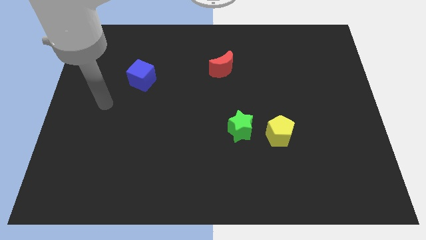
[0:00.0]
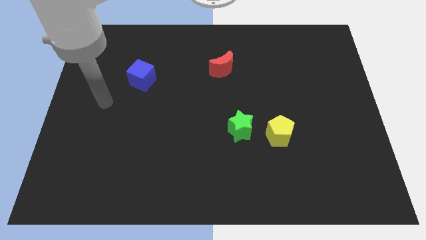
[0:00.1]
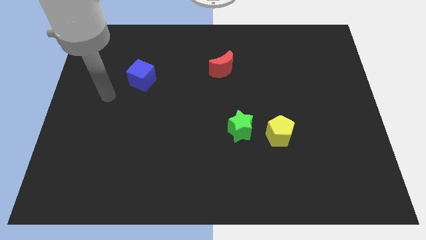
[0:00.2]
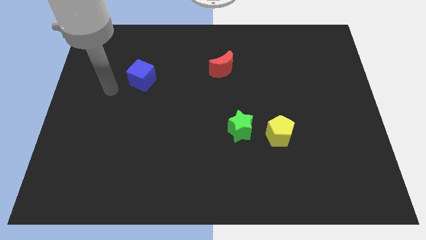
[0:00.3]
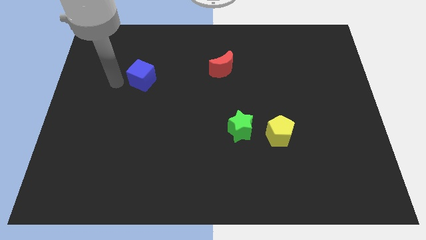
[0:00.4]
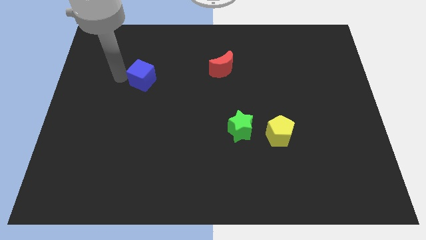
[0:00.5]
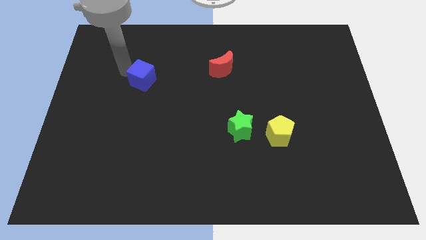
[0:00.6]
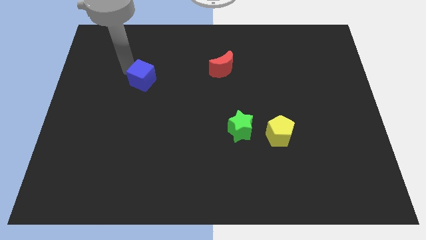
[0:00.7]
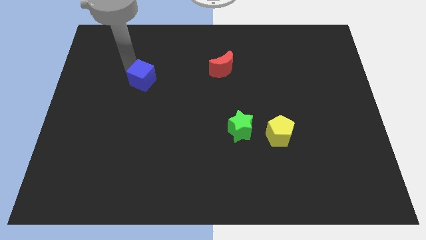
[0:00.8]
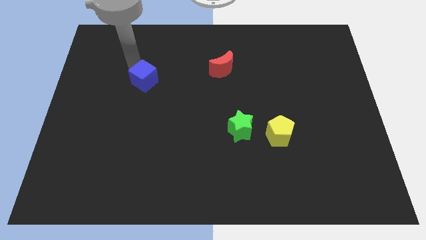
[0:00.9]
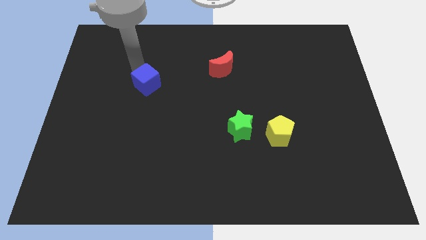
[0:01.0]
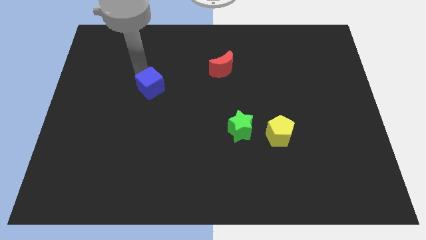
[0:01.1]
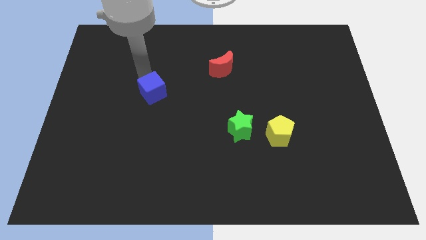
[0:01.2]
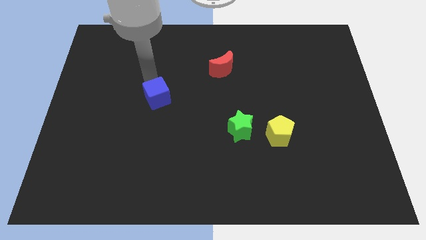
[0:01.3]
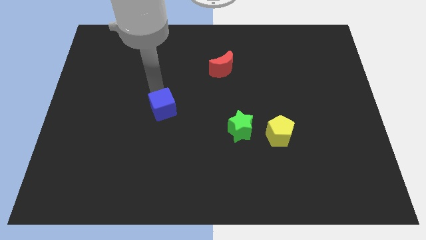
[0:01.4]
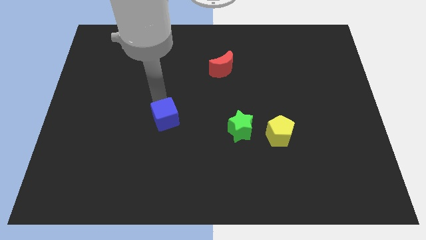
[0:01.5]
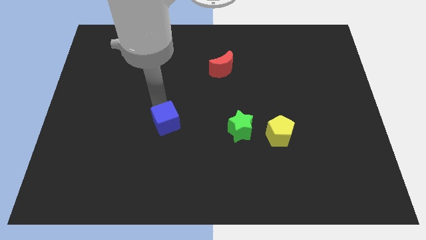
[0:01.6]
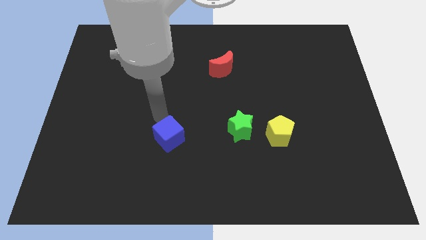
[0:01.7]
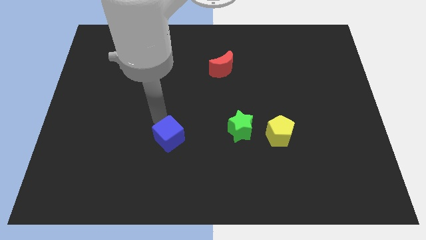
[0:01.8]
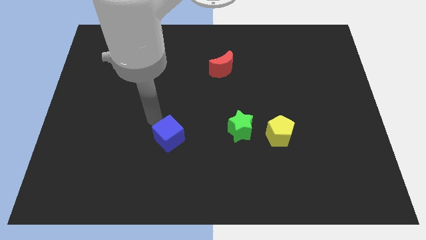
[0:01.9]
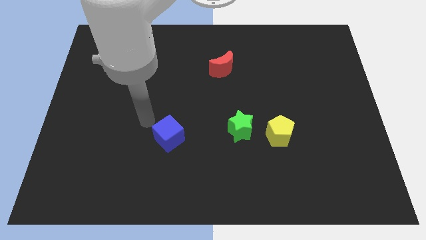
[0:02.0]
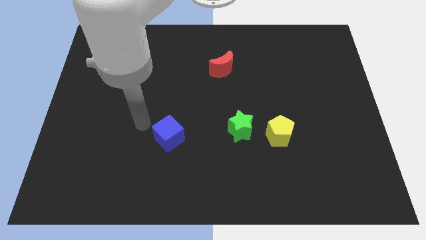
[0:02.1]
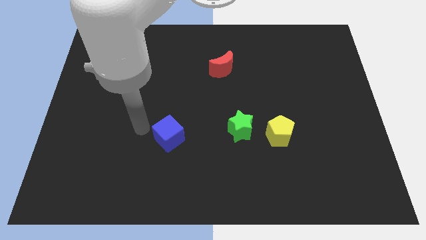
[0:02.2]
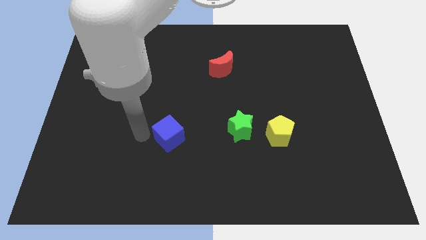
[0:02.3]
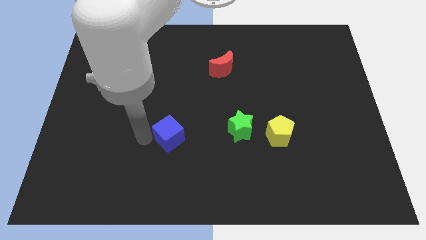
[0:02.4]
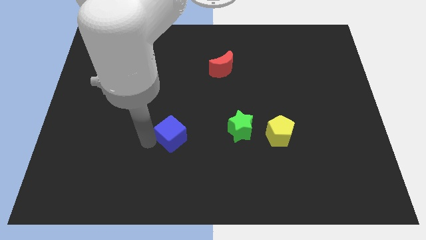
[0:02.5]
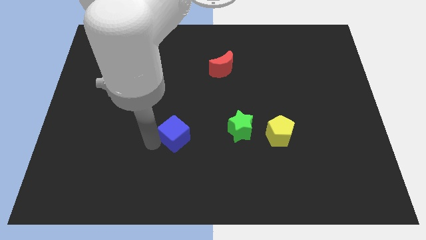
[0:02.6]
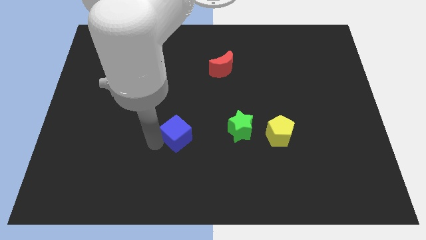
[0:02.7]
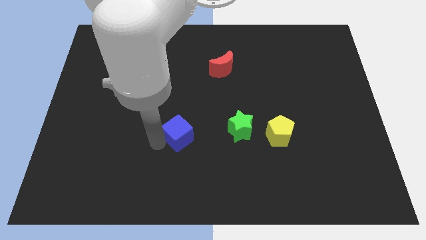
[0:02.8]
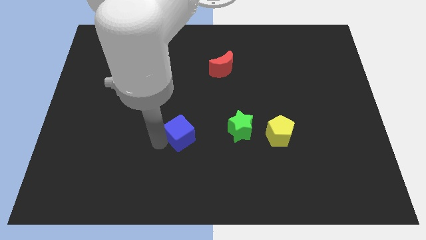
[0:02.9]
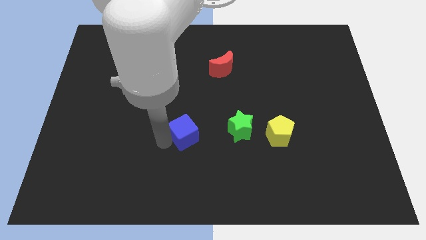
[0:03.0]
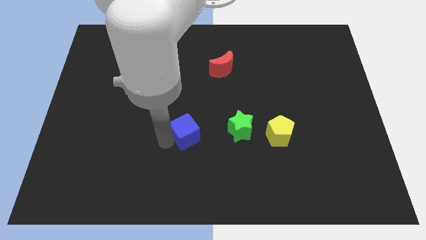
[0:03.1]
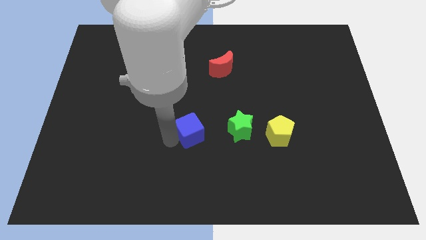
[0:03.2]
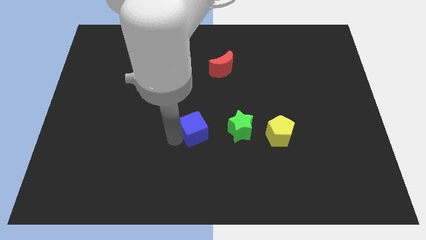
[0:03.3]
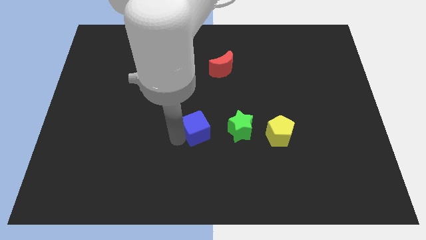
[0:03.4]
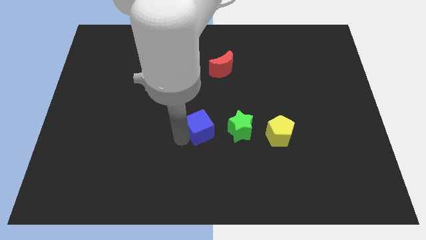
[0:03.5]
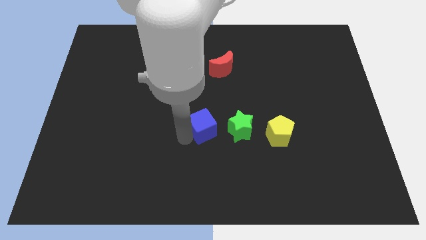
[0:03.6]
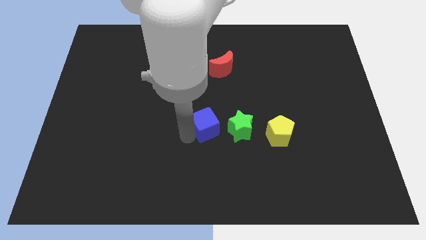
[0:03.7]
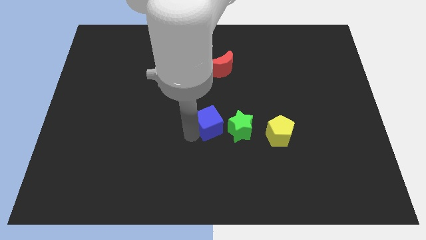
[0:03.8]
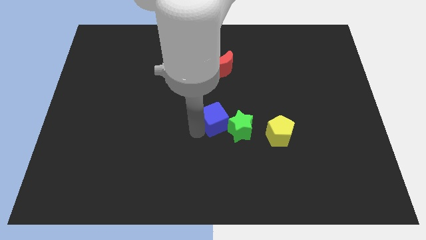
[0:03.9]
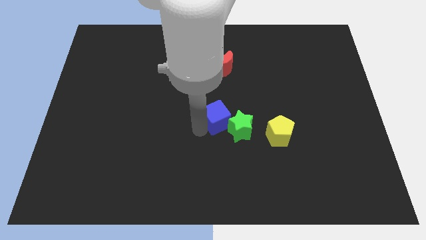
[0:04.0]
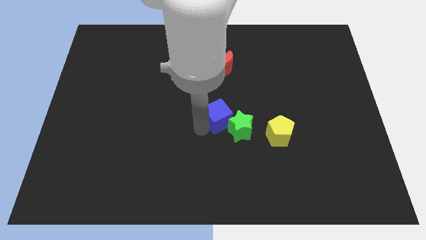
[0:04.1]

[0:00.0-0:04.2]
push the cube towards the star

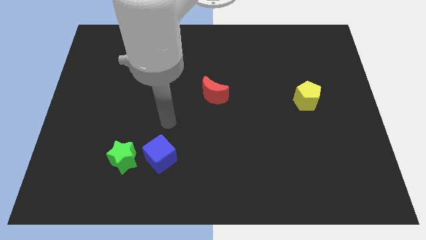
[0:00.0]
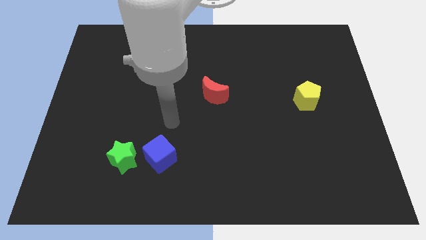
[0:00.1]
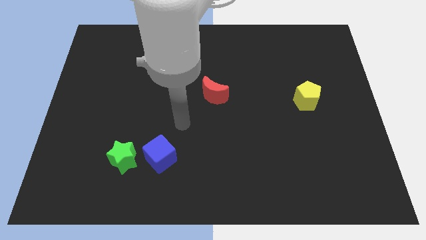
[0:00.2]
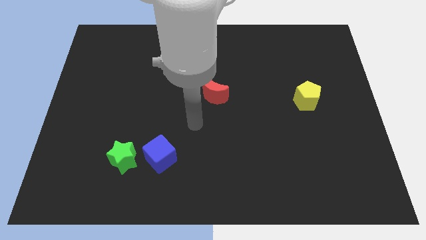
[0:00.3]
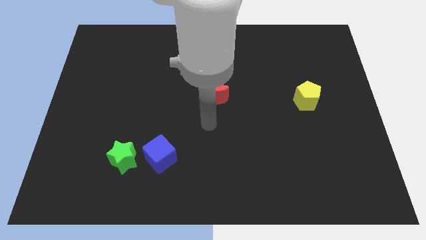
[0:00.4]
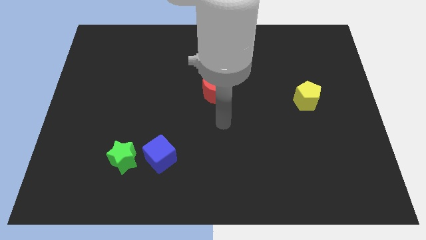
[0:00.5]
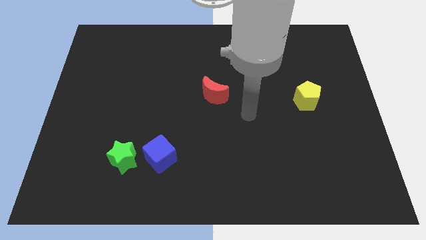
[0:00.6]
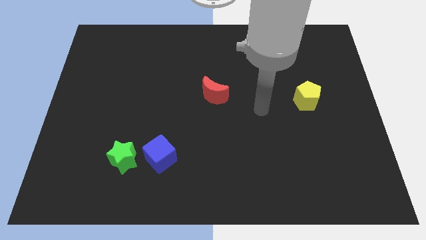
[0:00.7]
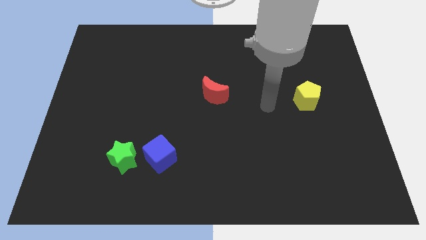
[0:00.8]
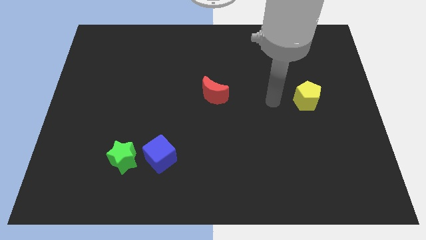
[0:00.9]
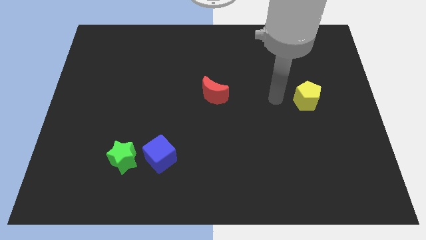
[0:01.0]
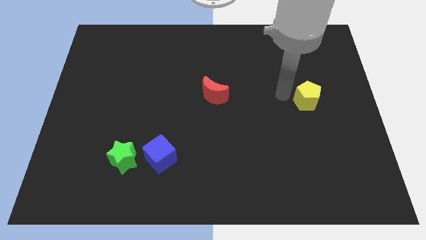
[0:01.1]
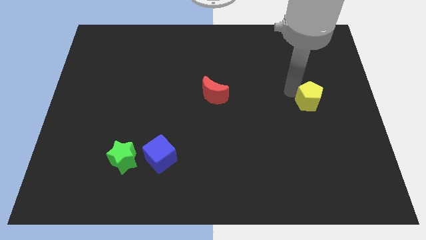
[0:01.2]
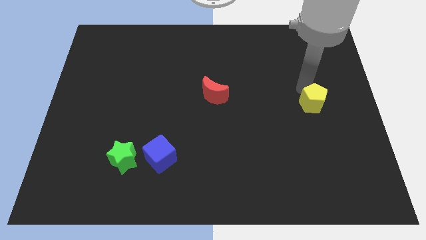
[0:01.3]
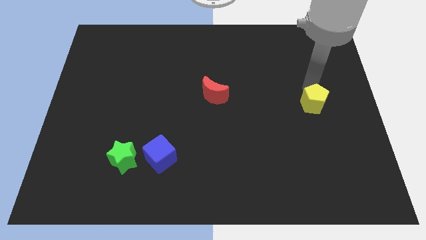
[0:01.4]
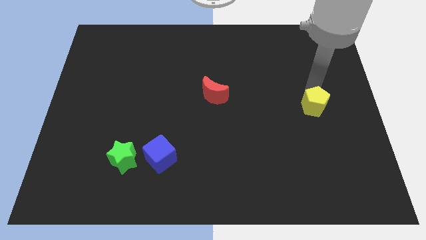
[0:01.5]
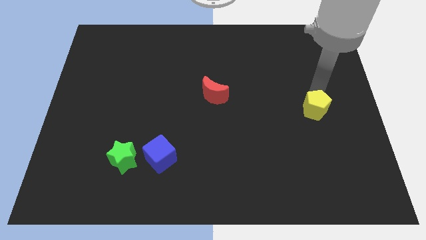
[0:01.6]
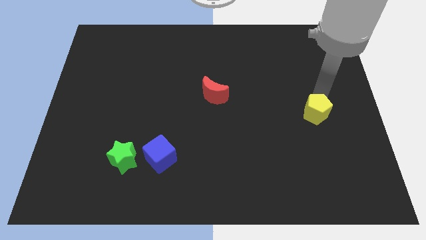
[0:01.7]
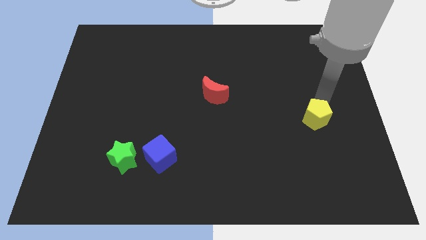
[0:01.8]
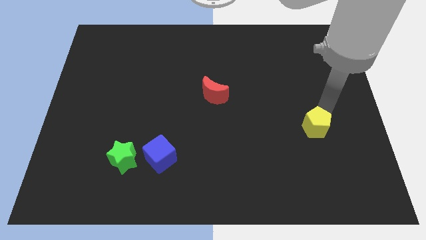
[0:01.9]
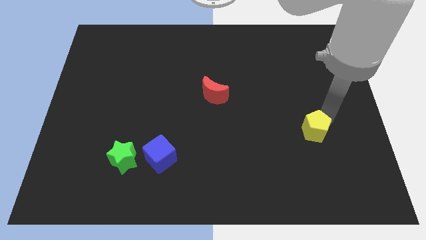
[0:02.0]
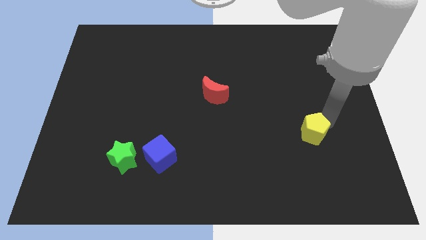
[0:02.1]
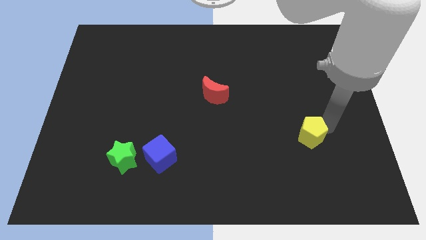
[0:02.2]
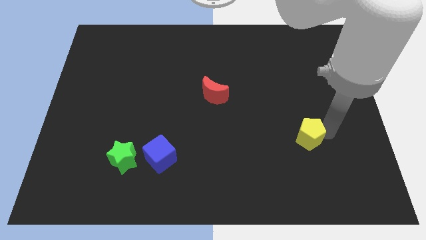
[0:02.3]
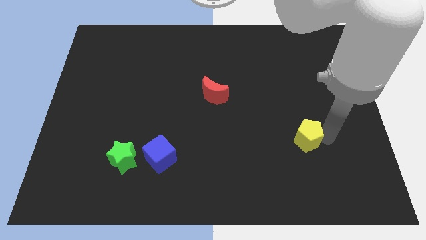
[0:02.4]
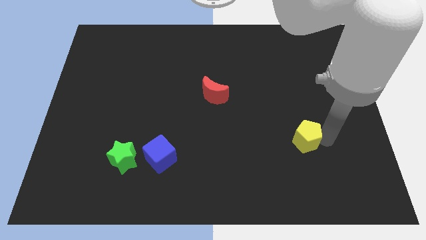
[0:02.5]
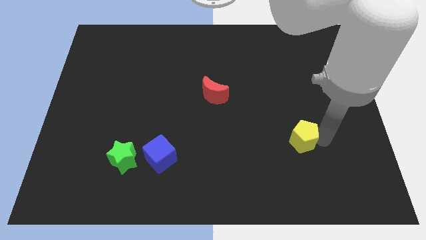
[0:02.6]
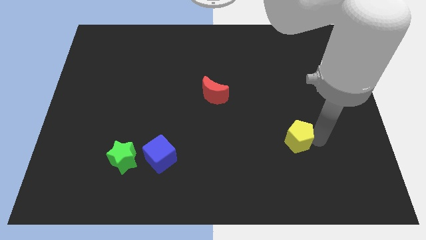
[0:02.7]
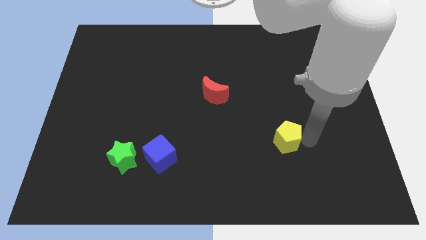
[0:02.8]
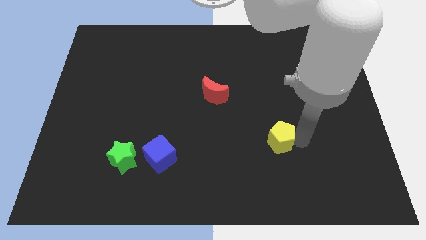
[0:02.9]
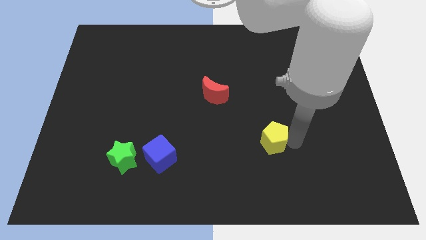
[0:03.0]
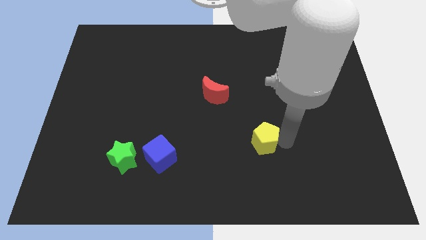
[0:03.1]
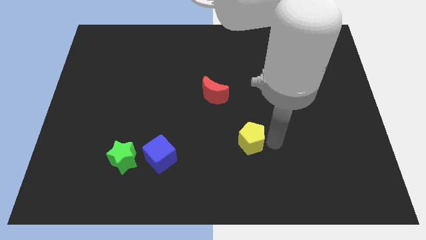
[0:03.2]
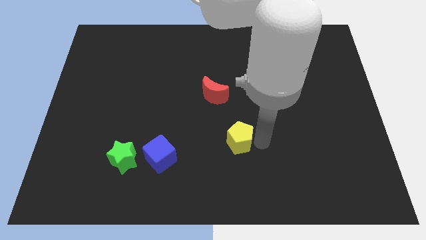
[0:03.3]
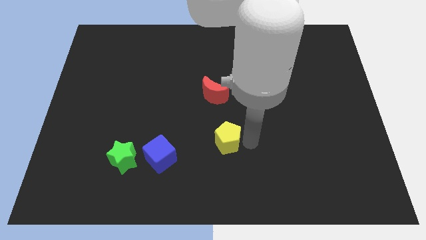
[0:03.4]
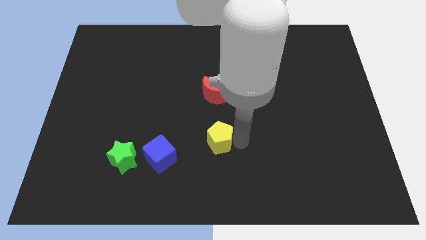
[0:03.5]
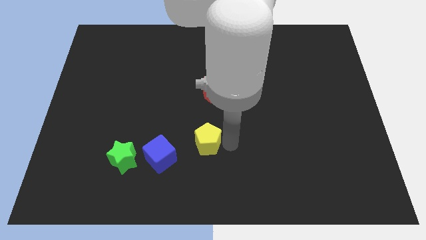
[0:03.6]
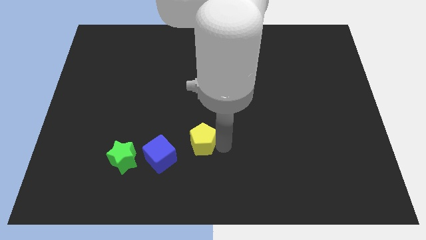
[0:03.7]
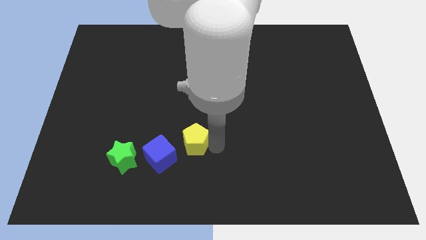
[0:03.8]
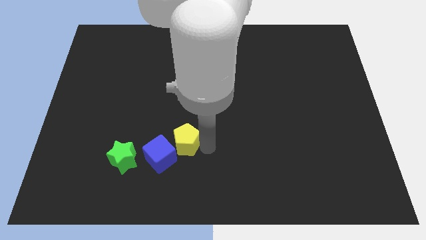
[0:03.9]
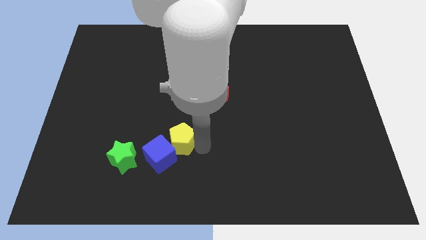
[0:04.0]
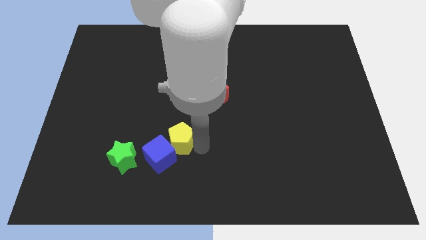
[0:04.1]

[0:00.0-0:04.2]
move the yellow block next to the blue cube
